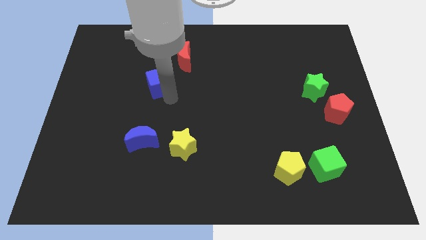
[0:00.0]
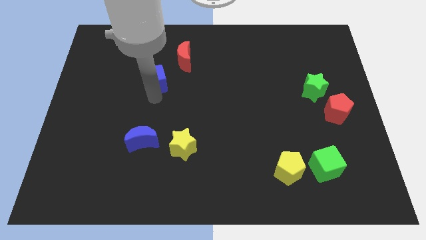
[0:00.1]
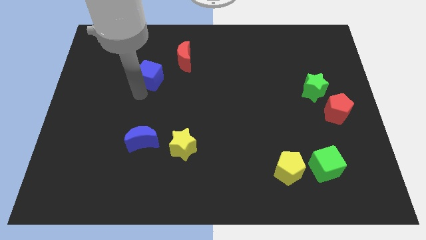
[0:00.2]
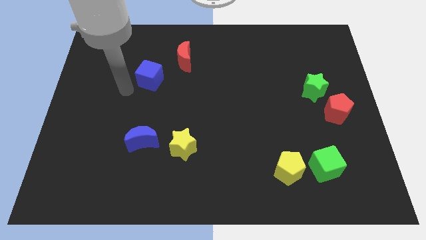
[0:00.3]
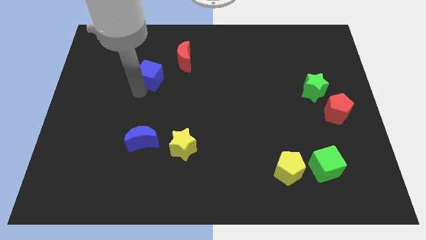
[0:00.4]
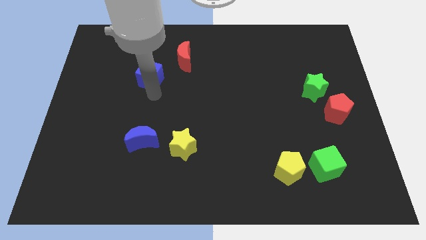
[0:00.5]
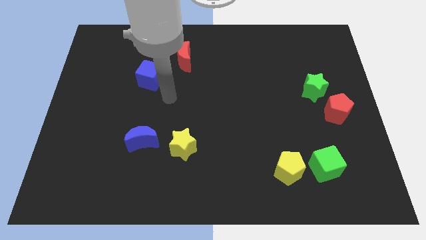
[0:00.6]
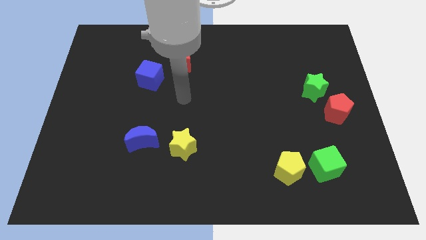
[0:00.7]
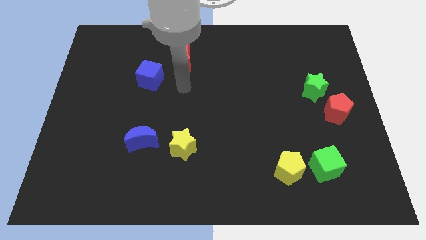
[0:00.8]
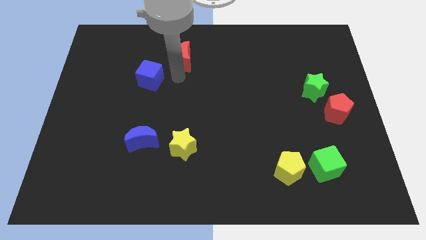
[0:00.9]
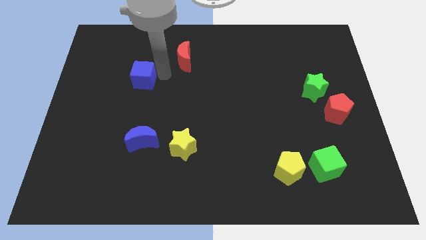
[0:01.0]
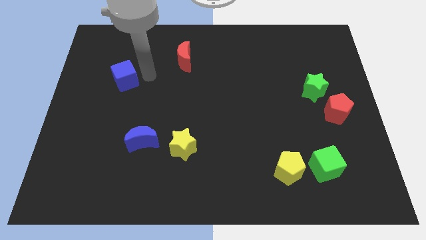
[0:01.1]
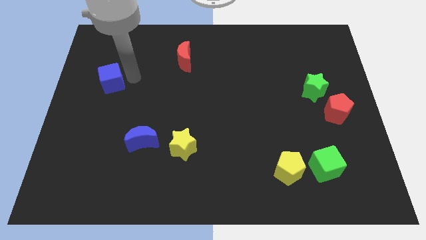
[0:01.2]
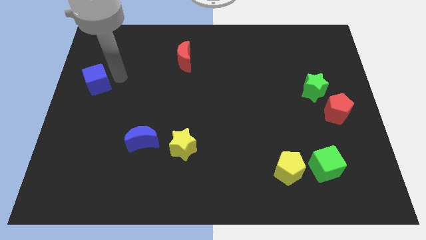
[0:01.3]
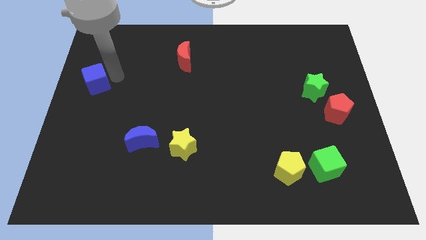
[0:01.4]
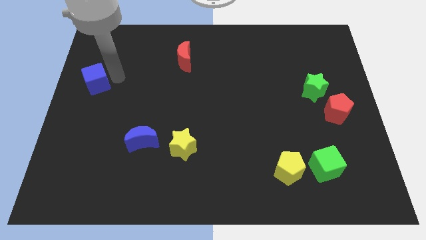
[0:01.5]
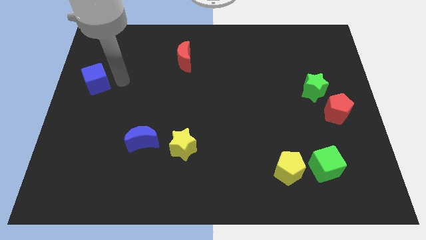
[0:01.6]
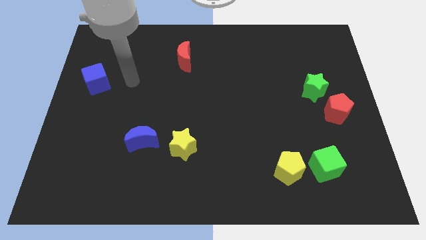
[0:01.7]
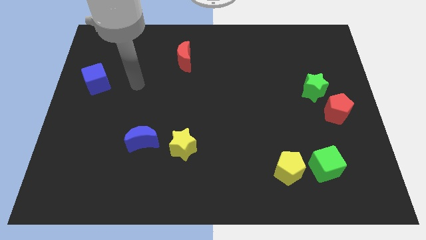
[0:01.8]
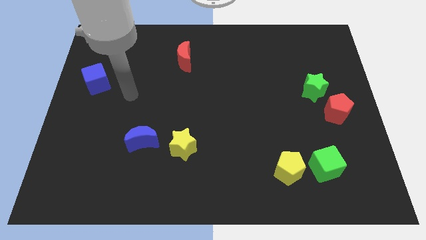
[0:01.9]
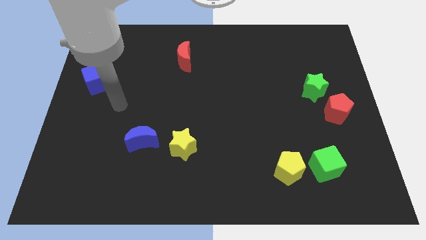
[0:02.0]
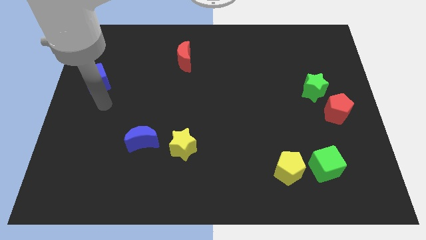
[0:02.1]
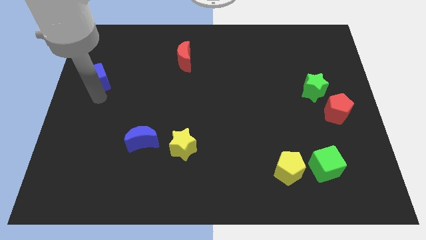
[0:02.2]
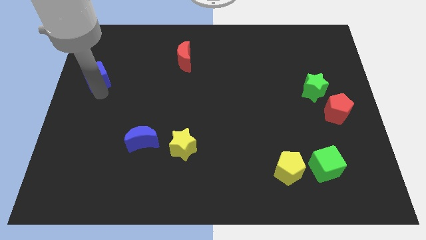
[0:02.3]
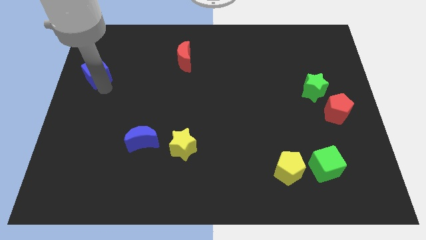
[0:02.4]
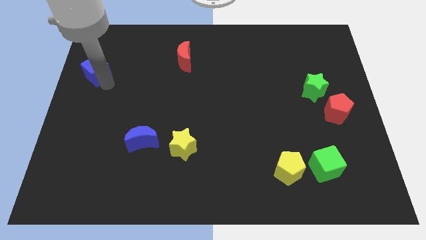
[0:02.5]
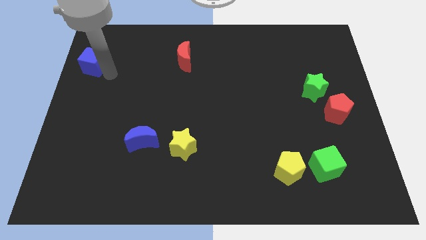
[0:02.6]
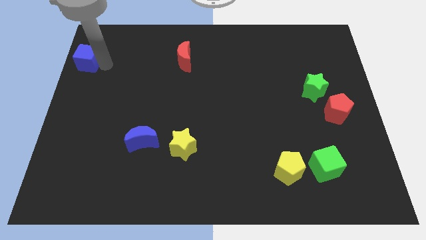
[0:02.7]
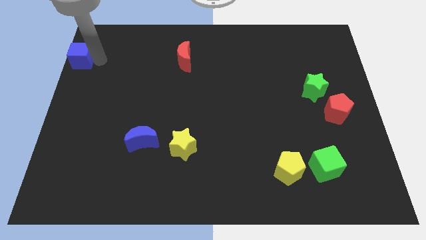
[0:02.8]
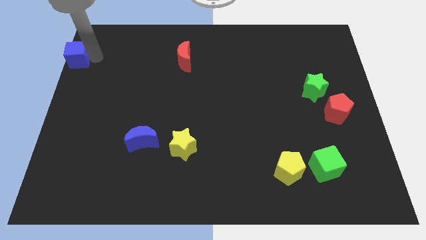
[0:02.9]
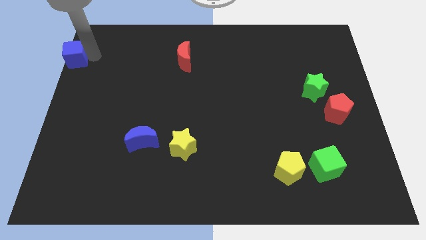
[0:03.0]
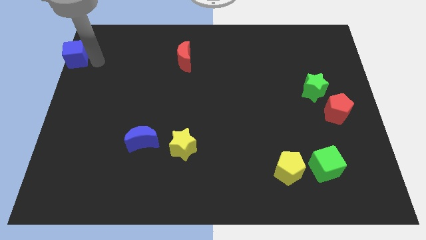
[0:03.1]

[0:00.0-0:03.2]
move blue cube to the top left corner of the board

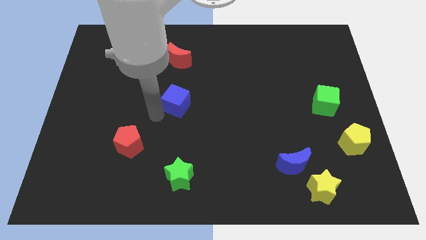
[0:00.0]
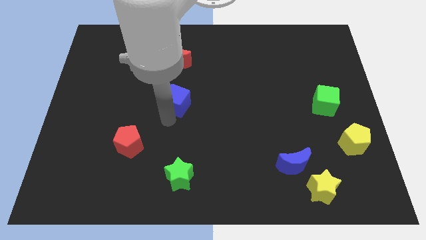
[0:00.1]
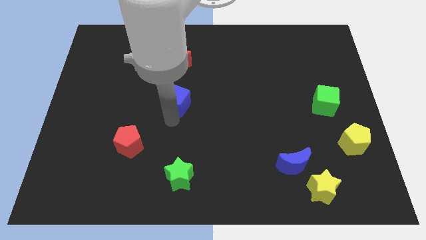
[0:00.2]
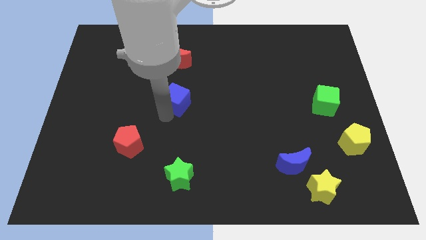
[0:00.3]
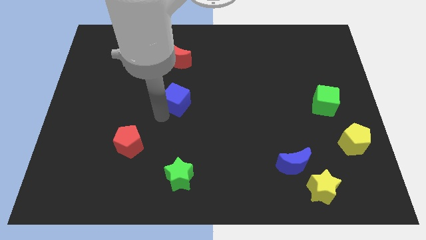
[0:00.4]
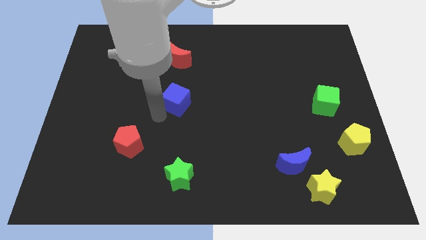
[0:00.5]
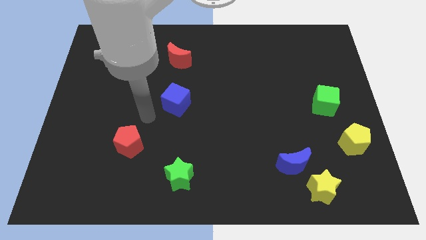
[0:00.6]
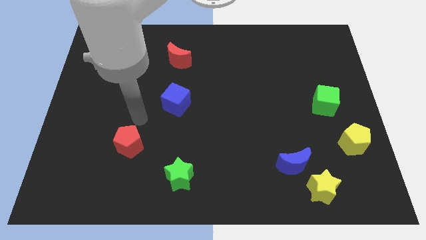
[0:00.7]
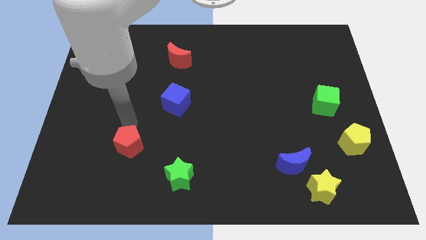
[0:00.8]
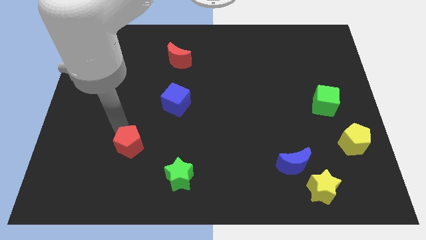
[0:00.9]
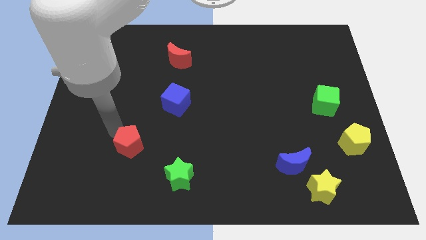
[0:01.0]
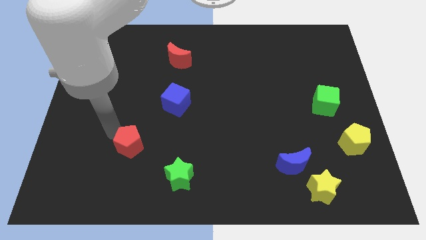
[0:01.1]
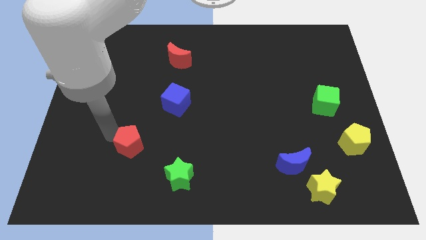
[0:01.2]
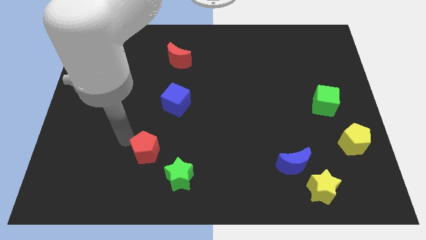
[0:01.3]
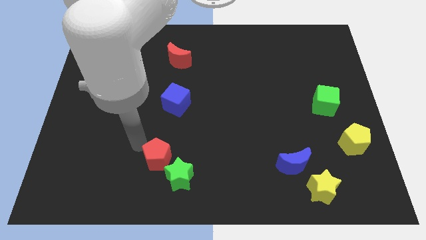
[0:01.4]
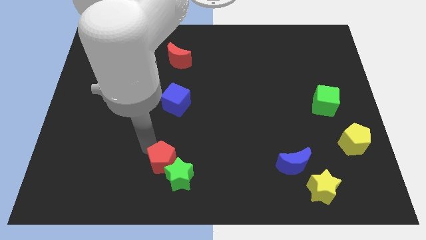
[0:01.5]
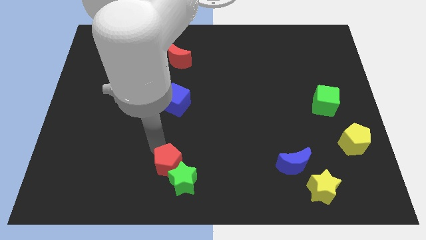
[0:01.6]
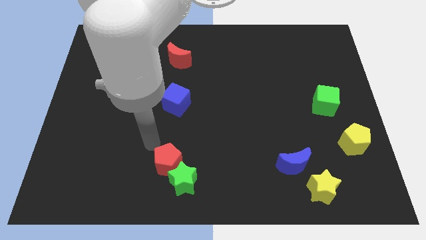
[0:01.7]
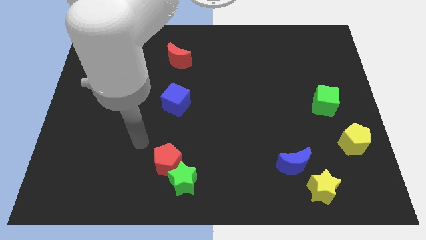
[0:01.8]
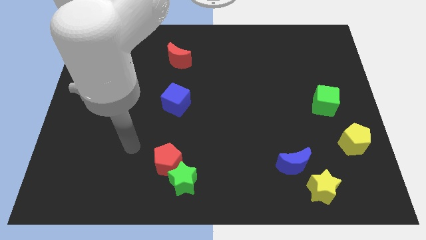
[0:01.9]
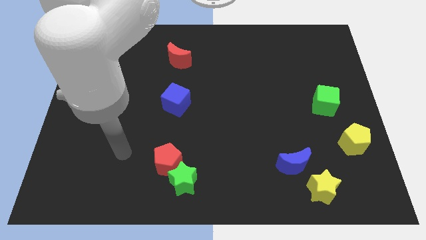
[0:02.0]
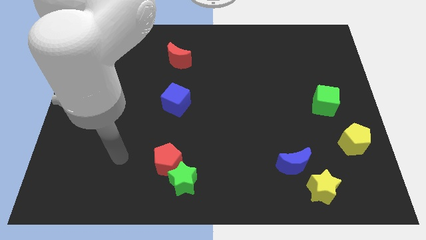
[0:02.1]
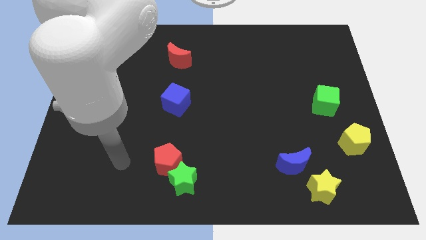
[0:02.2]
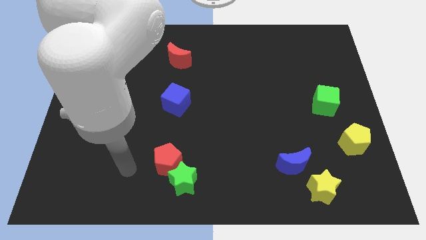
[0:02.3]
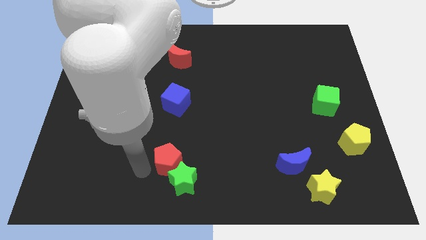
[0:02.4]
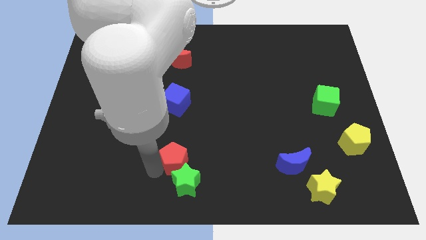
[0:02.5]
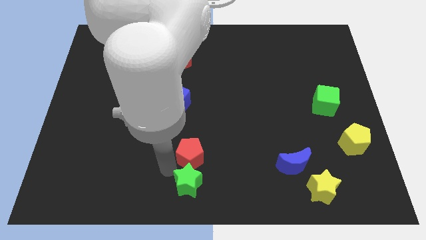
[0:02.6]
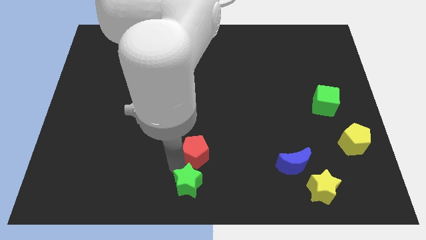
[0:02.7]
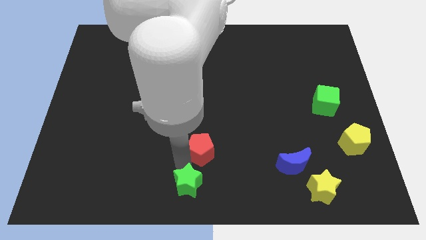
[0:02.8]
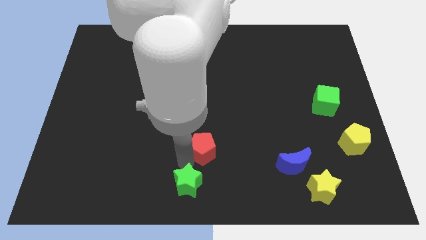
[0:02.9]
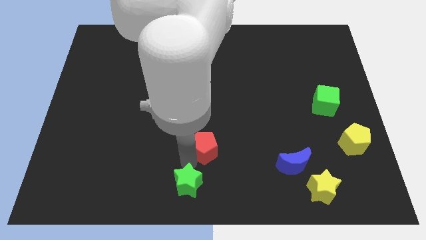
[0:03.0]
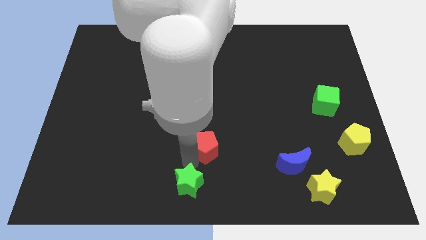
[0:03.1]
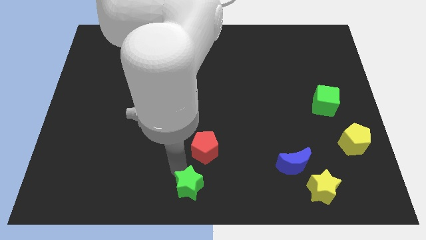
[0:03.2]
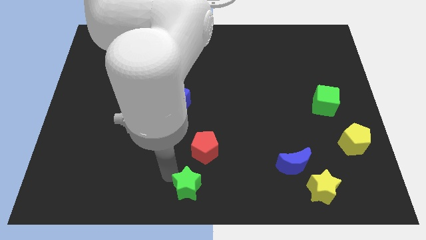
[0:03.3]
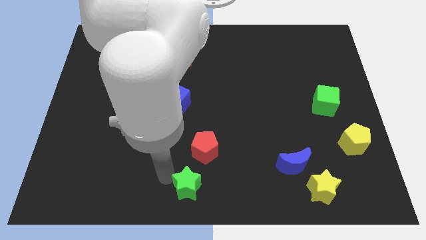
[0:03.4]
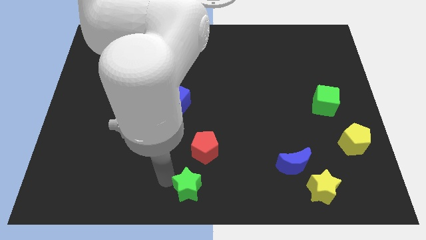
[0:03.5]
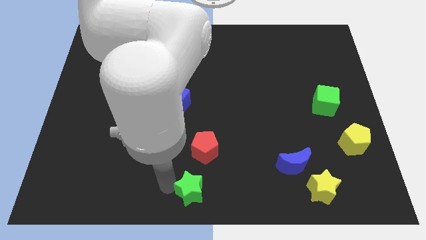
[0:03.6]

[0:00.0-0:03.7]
move the red pentagon slightly with the green star

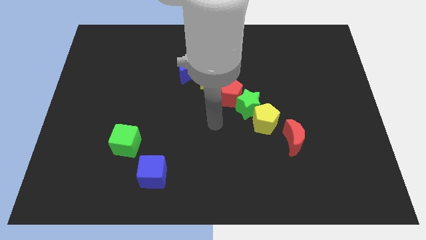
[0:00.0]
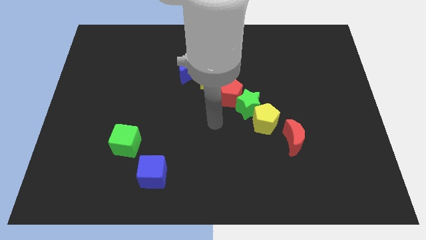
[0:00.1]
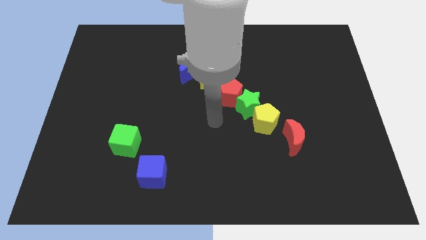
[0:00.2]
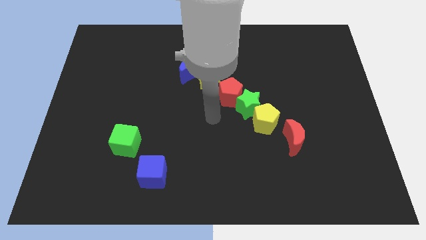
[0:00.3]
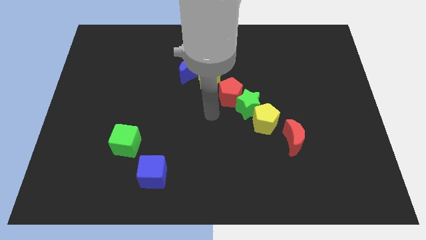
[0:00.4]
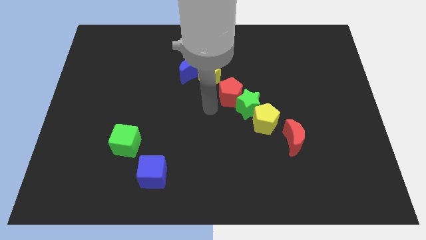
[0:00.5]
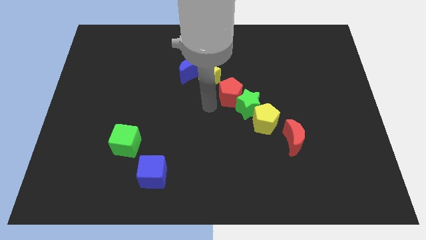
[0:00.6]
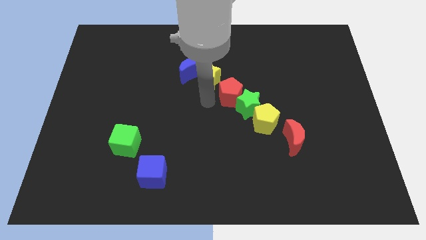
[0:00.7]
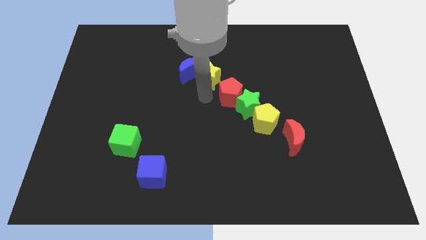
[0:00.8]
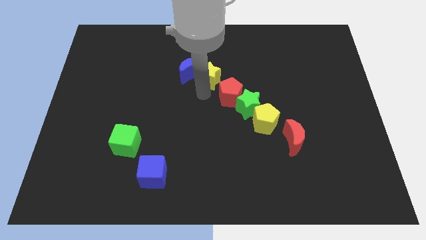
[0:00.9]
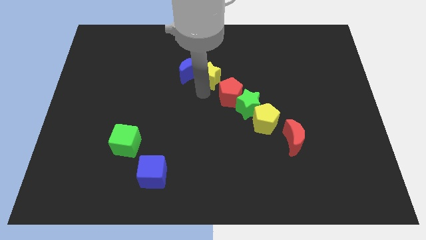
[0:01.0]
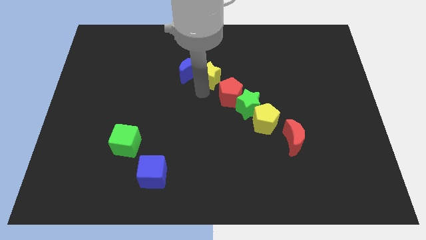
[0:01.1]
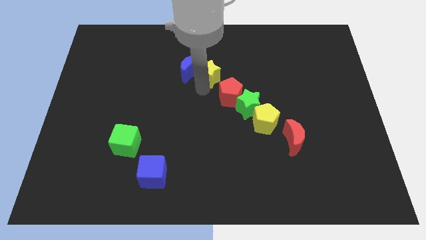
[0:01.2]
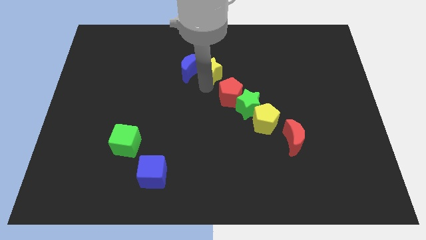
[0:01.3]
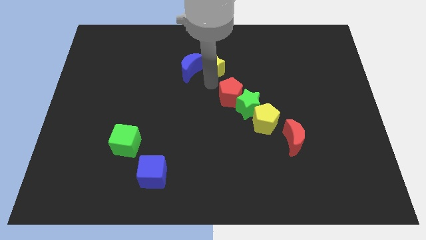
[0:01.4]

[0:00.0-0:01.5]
move your arm towards the yellow star

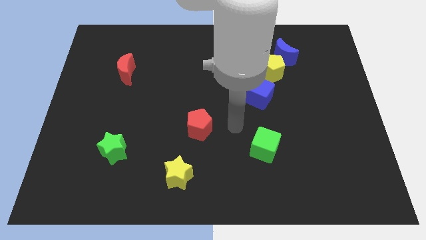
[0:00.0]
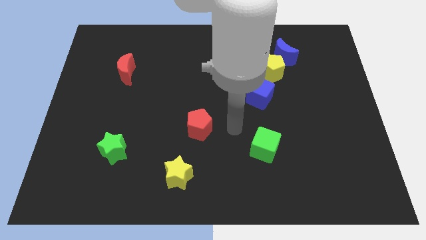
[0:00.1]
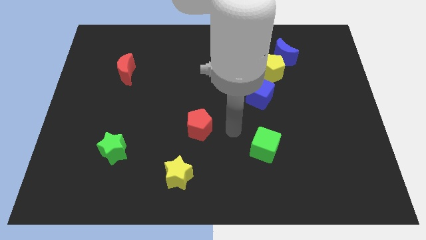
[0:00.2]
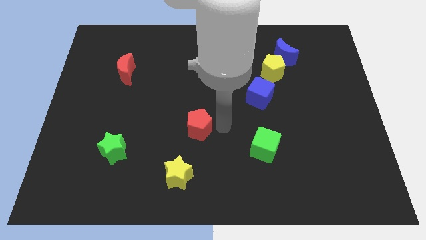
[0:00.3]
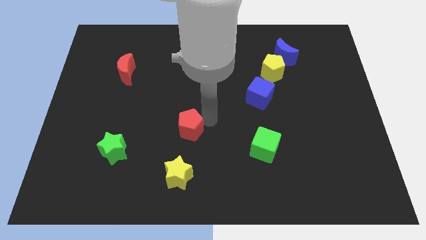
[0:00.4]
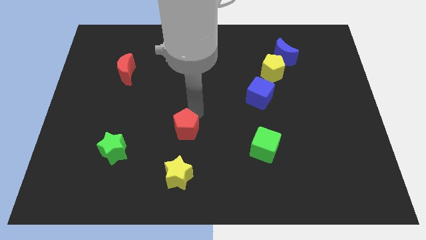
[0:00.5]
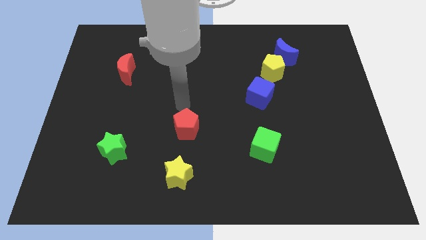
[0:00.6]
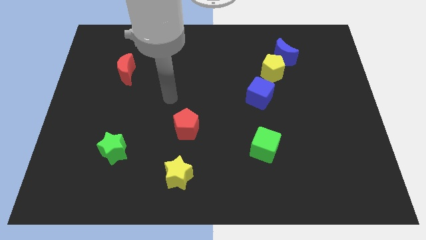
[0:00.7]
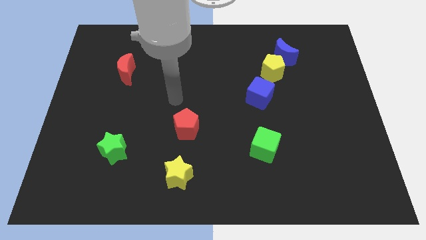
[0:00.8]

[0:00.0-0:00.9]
push red pentagon slightly towards the left
